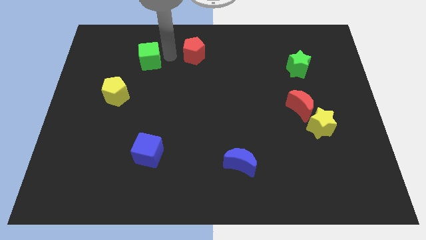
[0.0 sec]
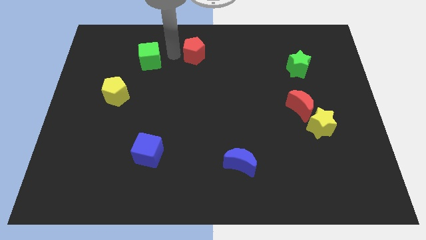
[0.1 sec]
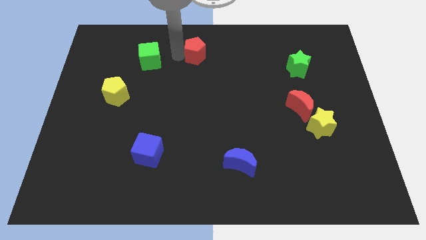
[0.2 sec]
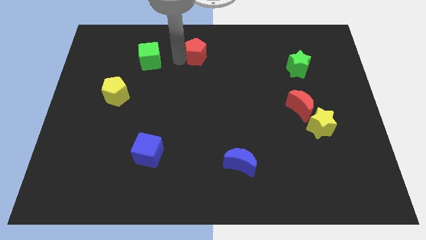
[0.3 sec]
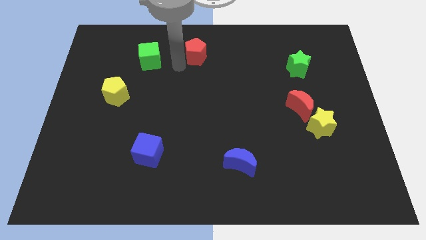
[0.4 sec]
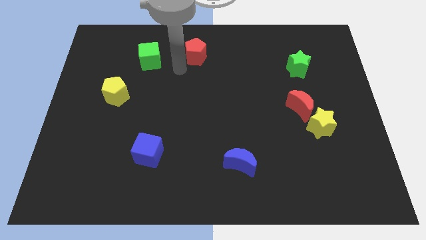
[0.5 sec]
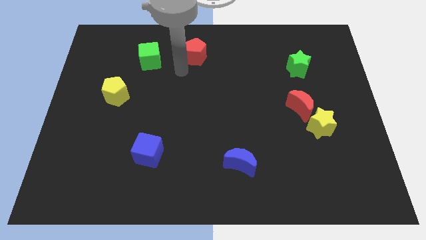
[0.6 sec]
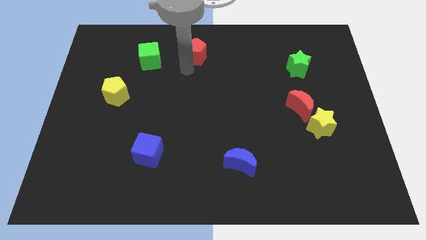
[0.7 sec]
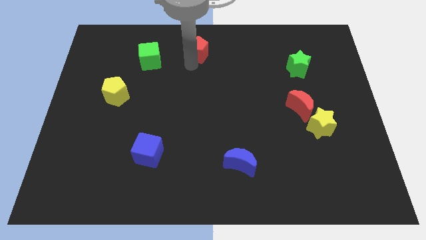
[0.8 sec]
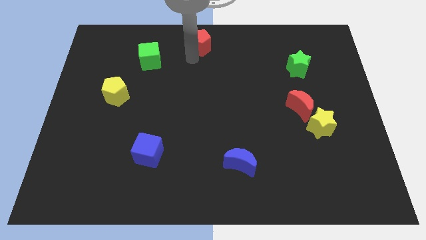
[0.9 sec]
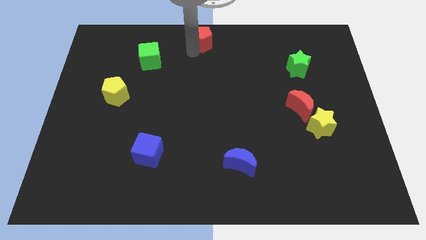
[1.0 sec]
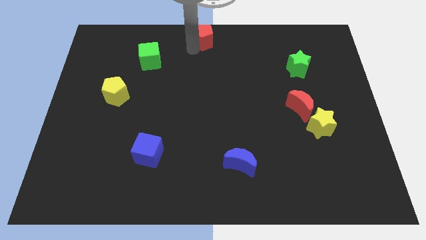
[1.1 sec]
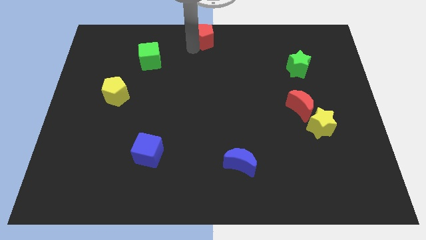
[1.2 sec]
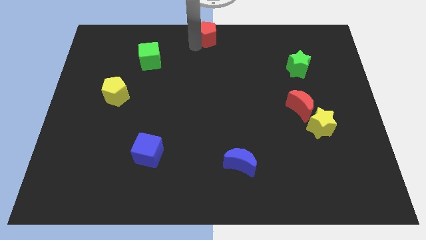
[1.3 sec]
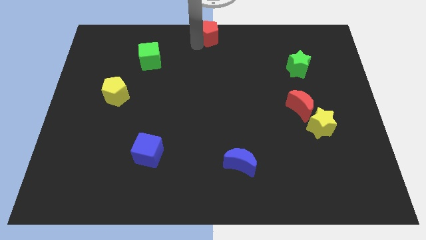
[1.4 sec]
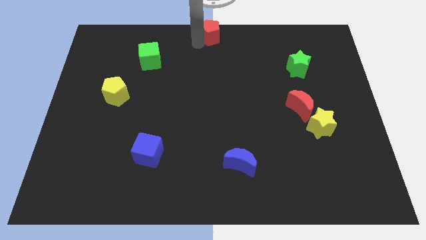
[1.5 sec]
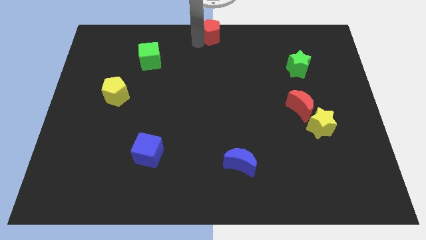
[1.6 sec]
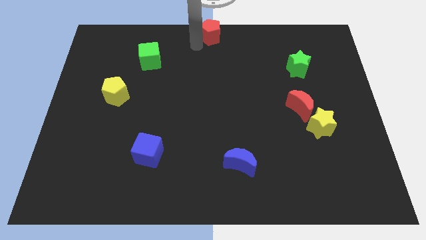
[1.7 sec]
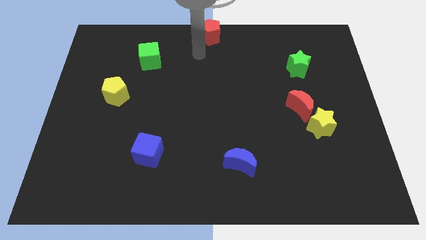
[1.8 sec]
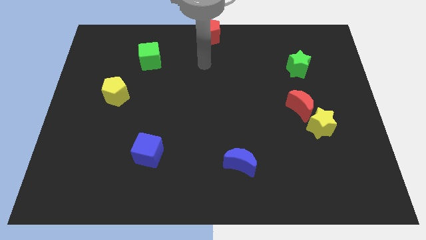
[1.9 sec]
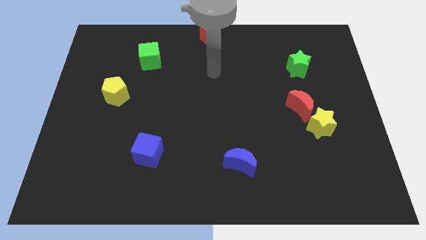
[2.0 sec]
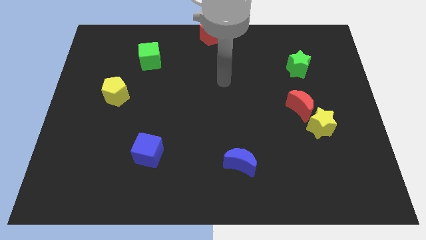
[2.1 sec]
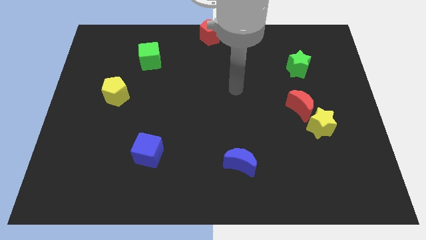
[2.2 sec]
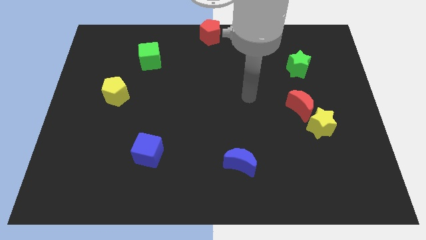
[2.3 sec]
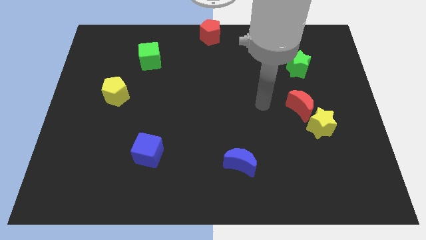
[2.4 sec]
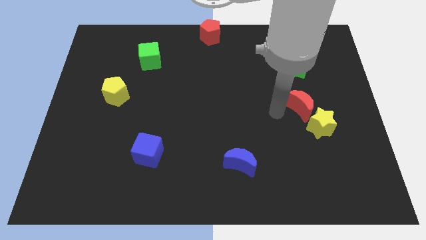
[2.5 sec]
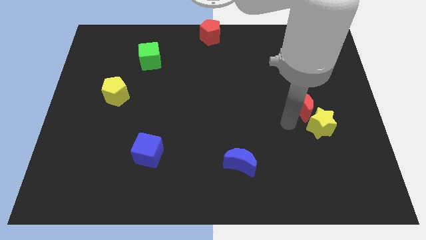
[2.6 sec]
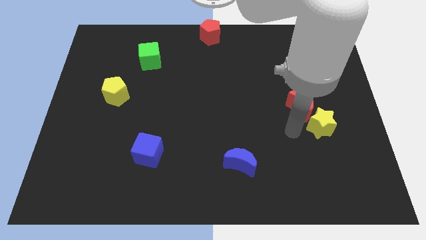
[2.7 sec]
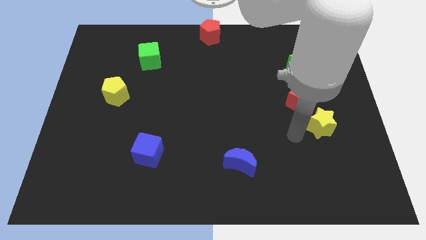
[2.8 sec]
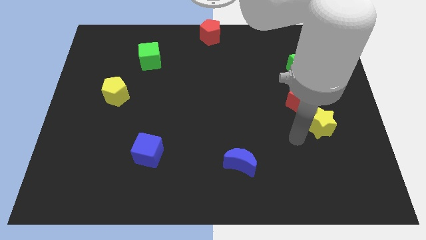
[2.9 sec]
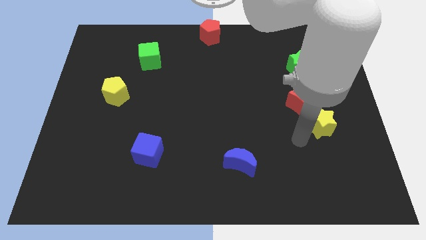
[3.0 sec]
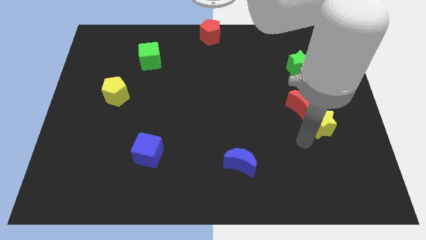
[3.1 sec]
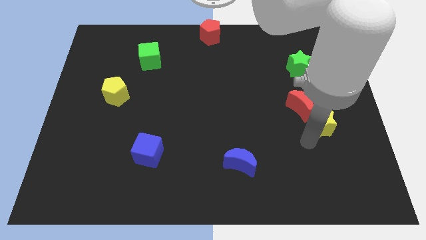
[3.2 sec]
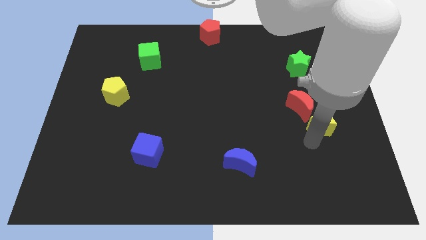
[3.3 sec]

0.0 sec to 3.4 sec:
push the red pentagon at the top center of the board

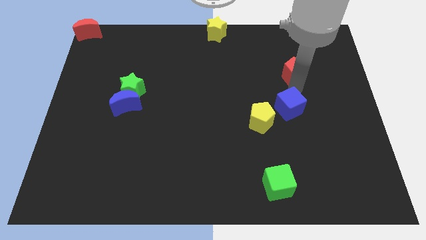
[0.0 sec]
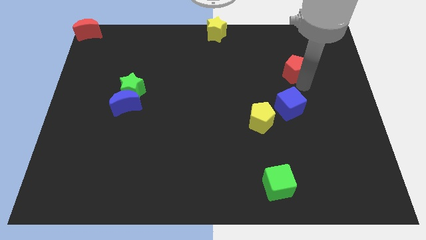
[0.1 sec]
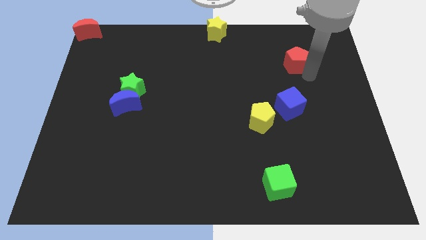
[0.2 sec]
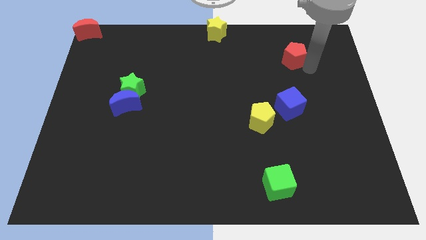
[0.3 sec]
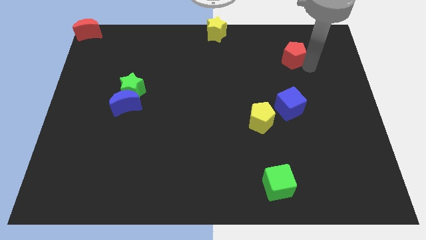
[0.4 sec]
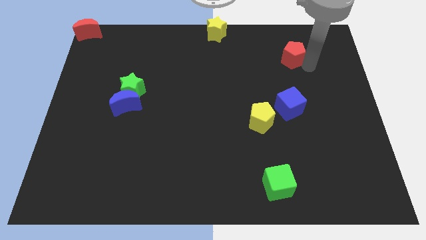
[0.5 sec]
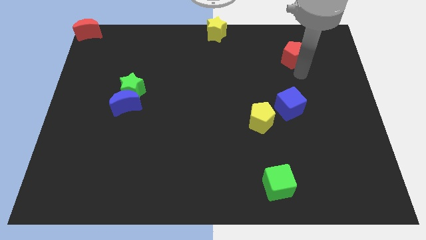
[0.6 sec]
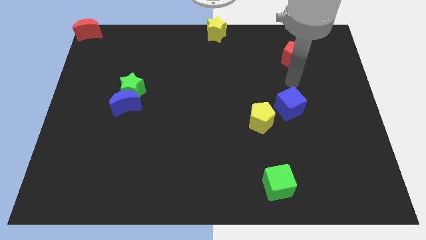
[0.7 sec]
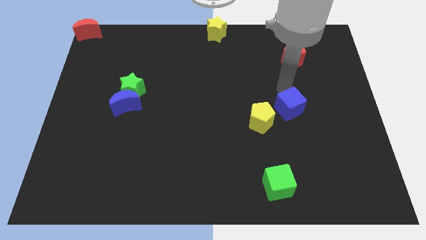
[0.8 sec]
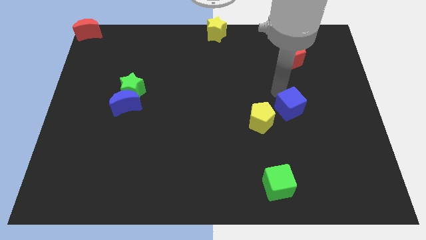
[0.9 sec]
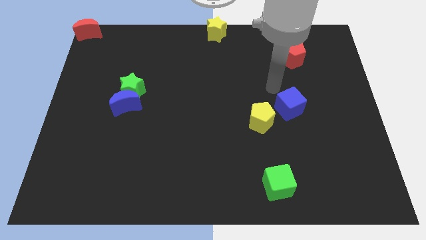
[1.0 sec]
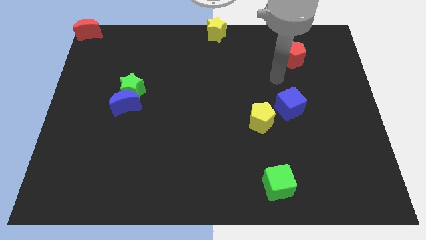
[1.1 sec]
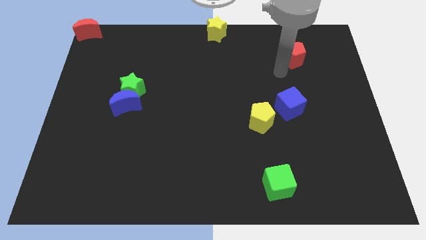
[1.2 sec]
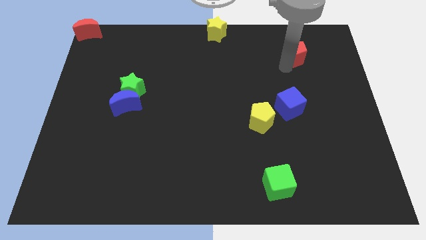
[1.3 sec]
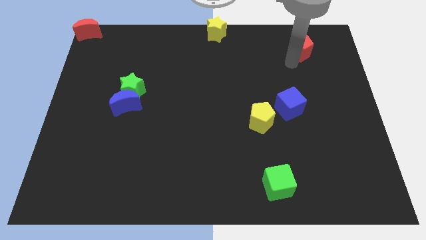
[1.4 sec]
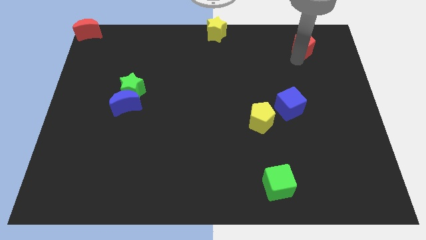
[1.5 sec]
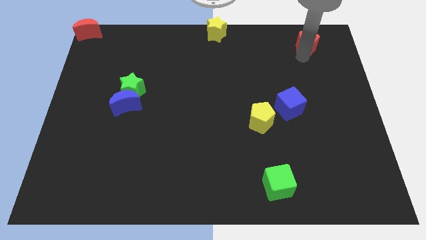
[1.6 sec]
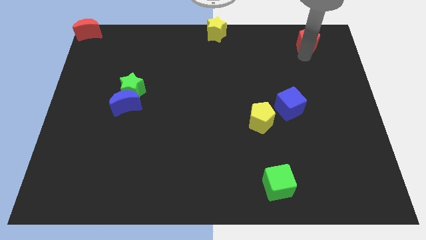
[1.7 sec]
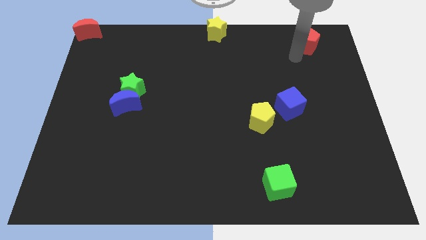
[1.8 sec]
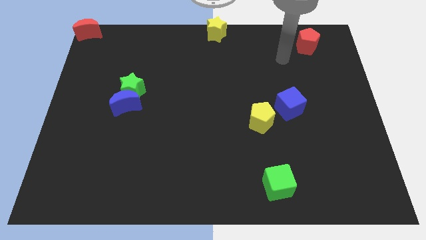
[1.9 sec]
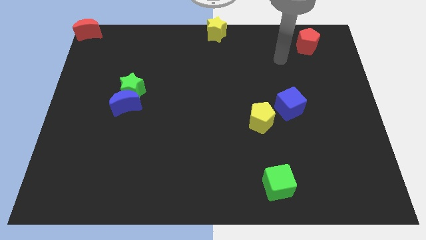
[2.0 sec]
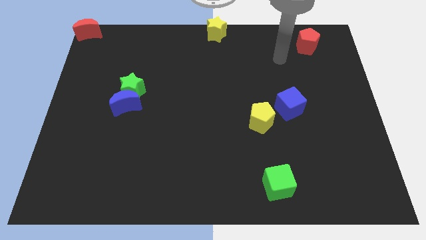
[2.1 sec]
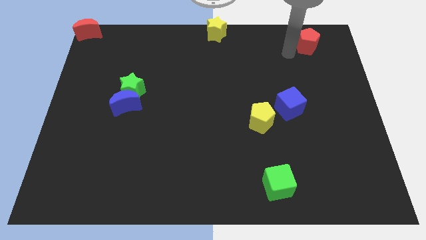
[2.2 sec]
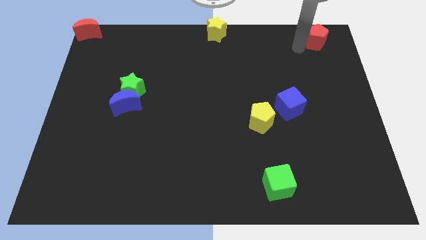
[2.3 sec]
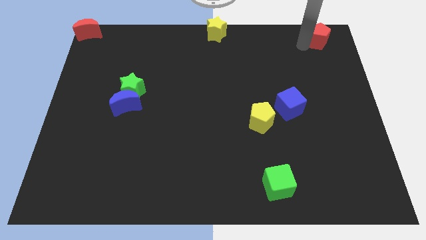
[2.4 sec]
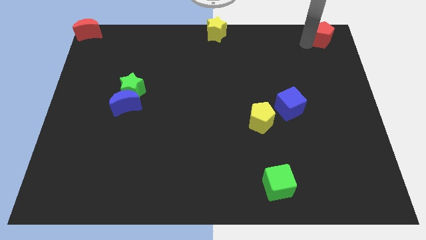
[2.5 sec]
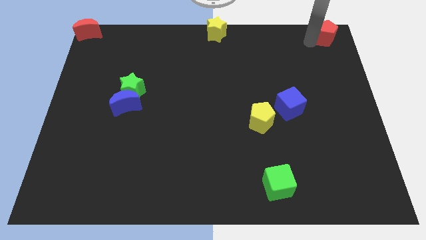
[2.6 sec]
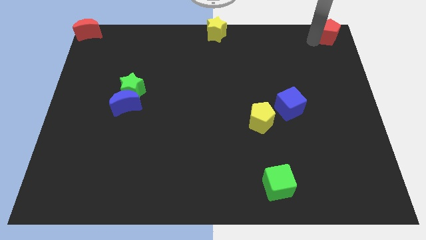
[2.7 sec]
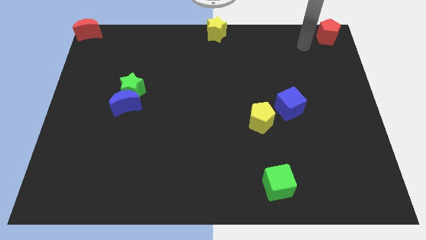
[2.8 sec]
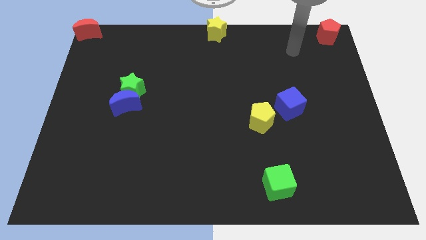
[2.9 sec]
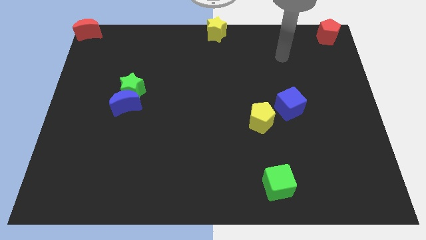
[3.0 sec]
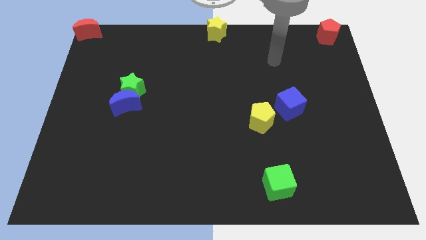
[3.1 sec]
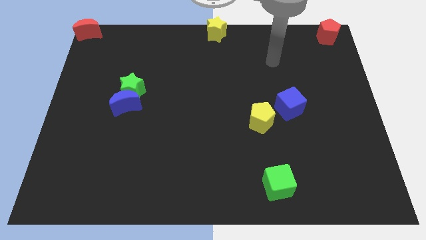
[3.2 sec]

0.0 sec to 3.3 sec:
push the red pentagon to the top right corner of the board

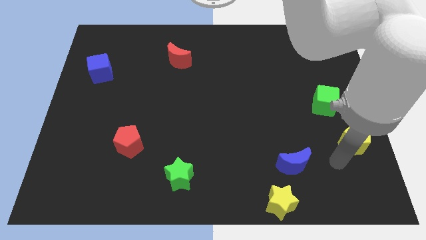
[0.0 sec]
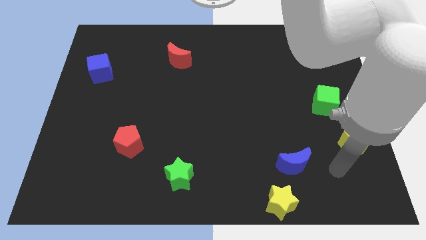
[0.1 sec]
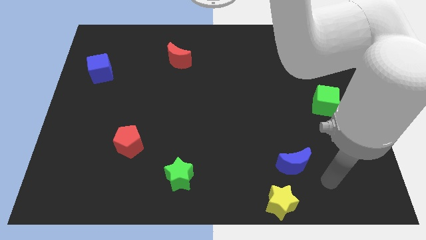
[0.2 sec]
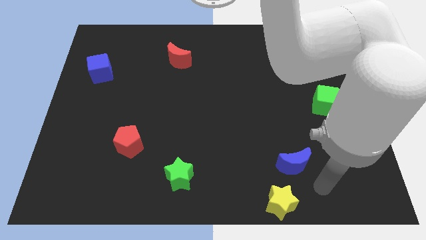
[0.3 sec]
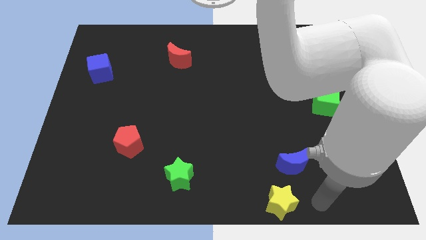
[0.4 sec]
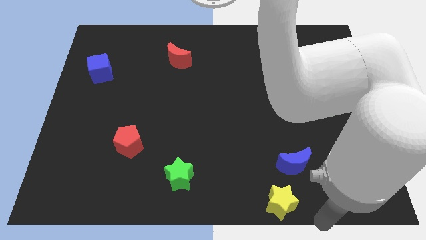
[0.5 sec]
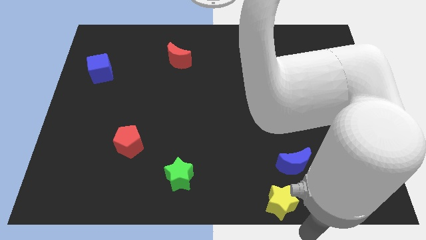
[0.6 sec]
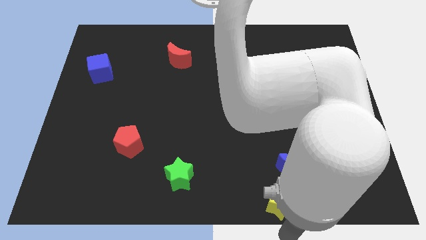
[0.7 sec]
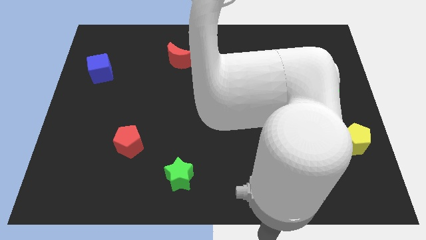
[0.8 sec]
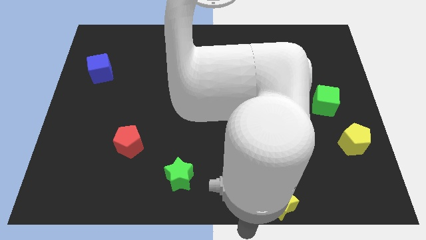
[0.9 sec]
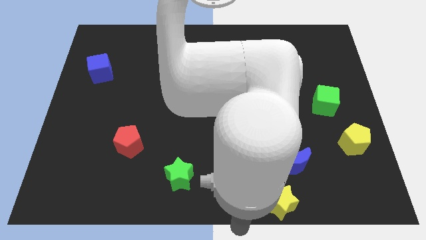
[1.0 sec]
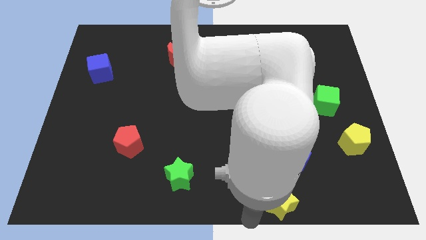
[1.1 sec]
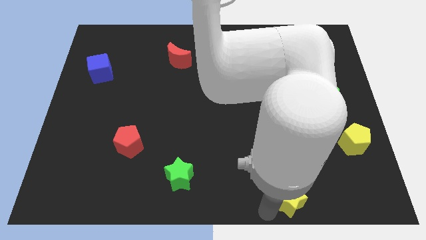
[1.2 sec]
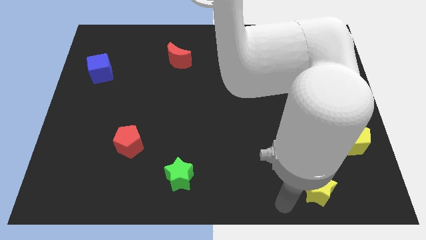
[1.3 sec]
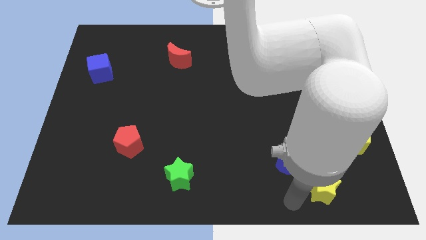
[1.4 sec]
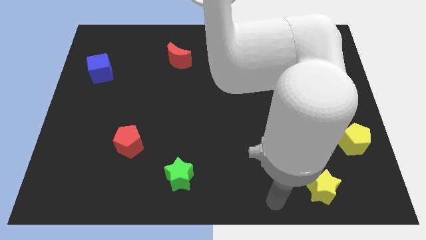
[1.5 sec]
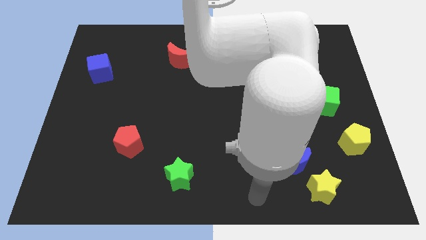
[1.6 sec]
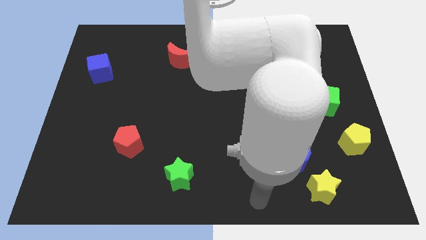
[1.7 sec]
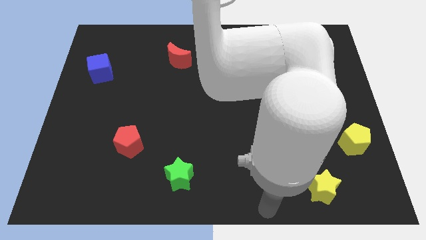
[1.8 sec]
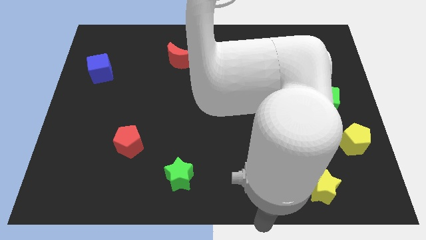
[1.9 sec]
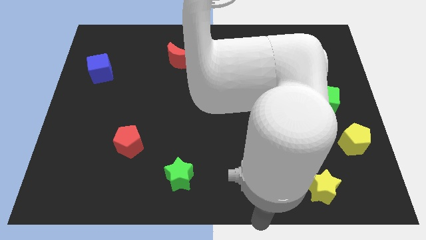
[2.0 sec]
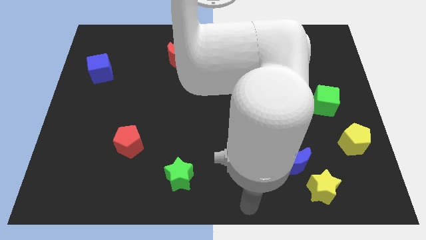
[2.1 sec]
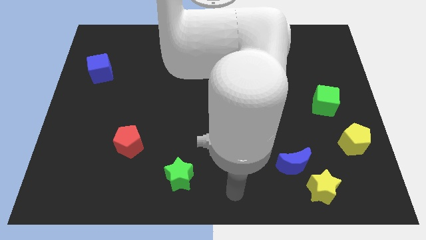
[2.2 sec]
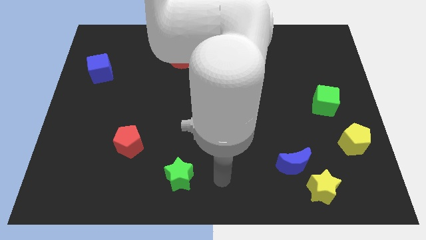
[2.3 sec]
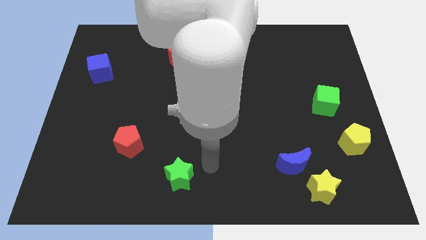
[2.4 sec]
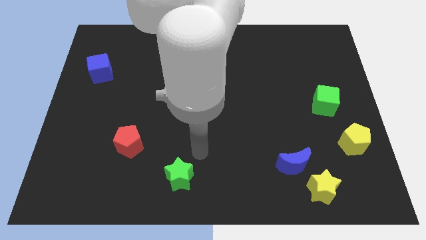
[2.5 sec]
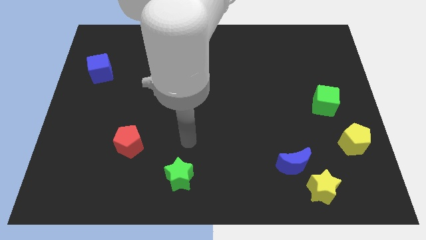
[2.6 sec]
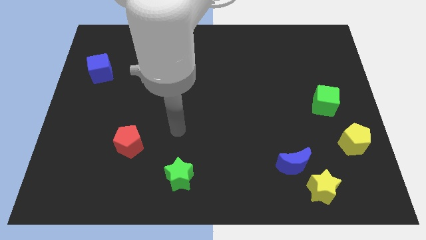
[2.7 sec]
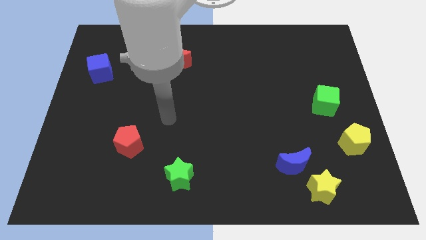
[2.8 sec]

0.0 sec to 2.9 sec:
move the yellow star slightly towards the blue crescent
